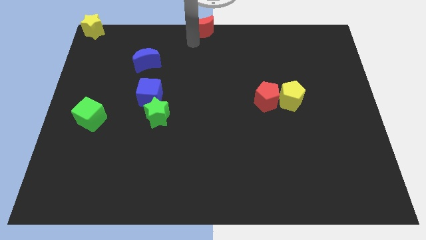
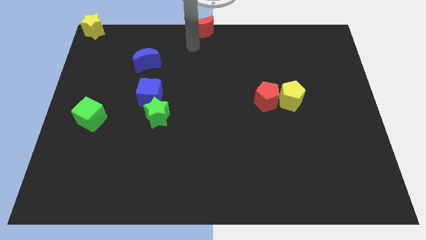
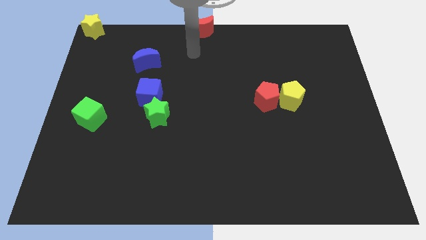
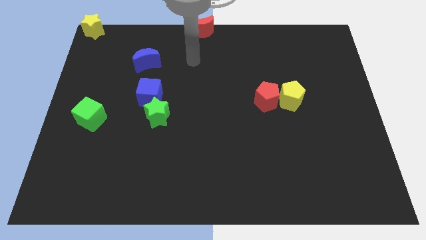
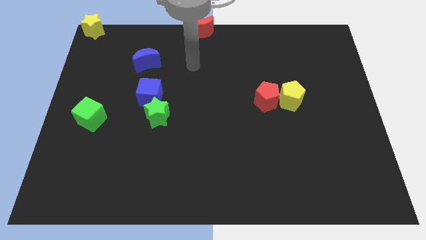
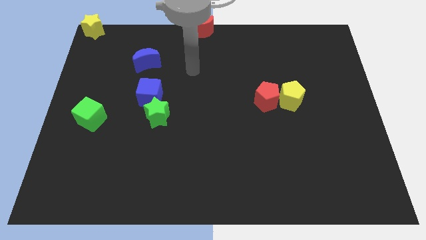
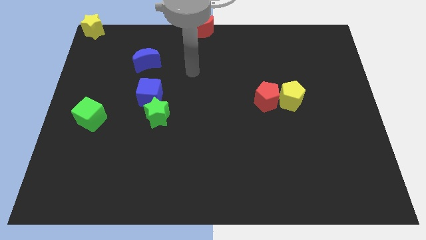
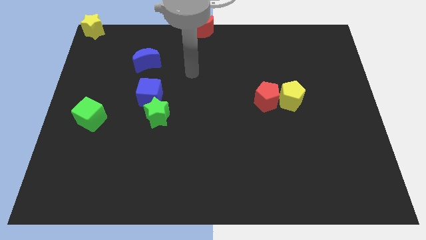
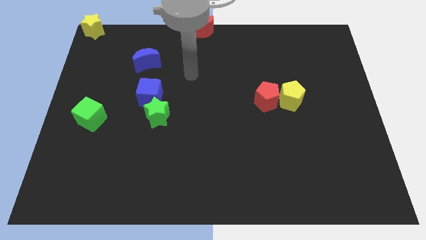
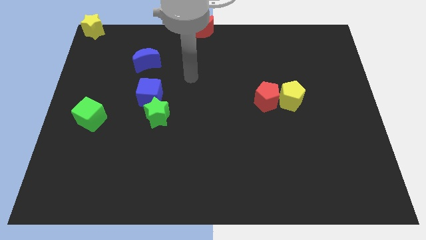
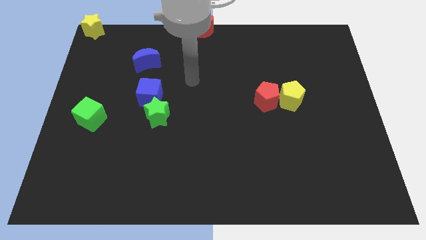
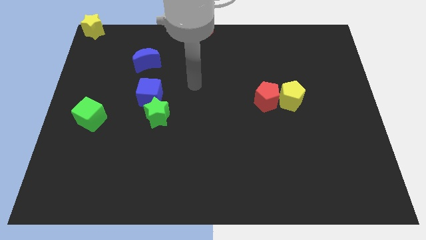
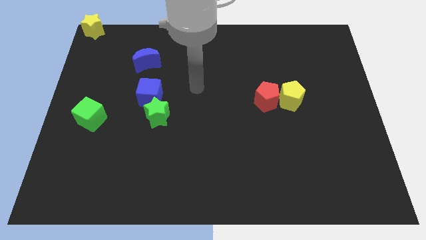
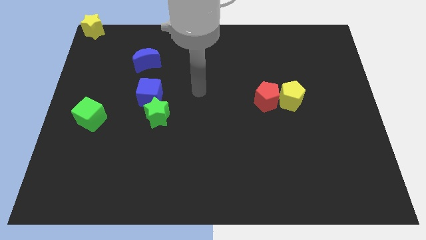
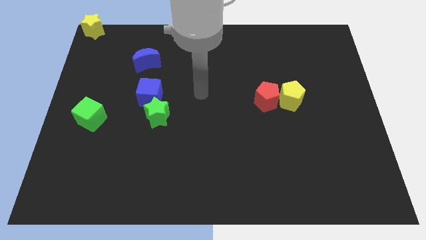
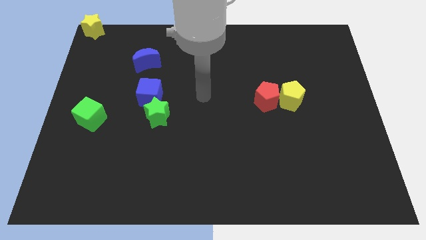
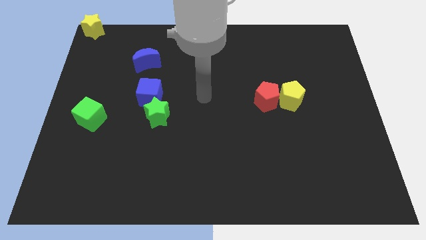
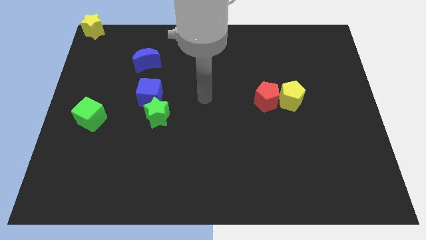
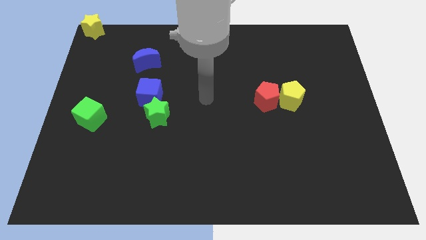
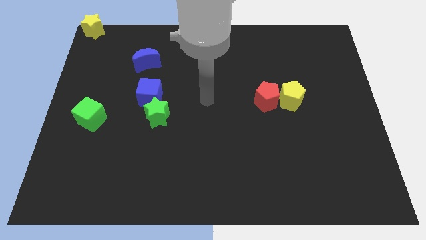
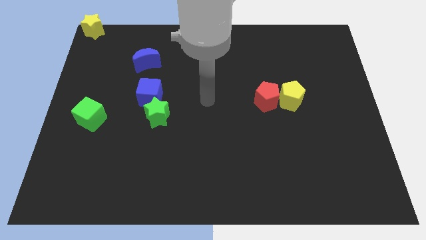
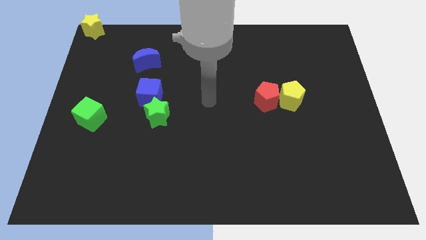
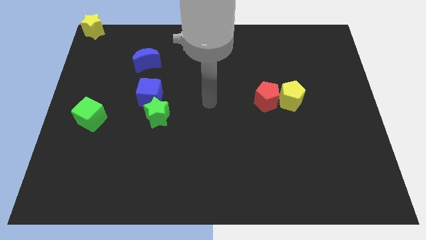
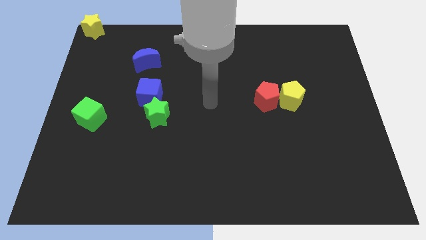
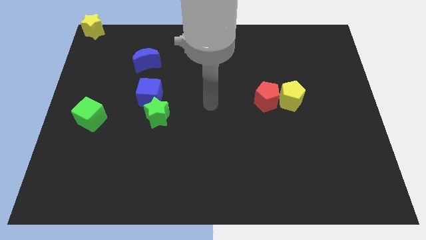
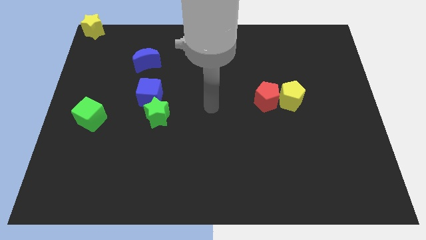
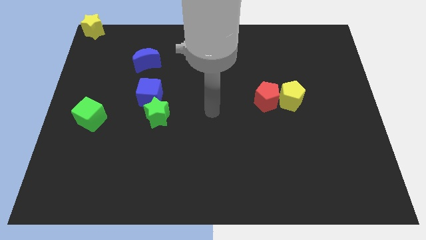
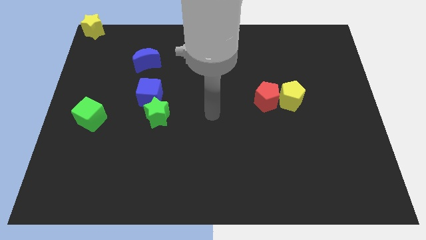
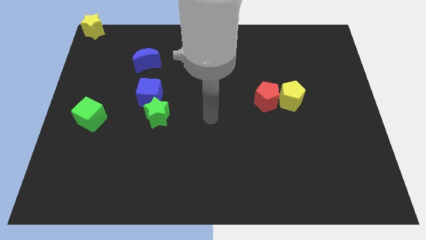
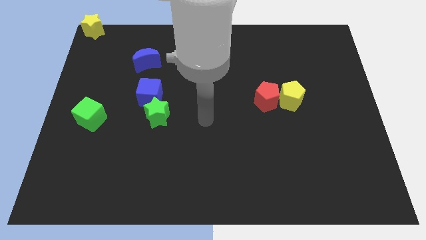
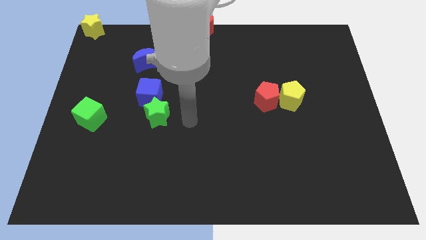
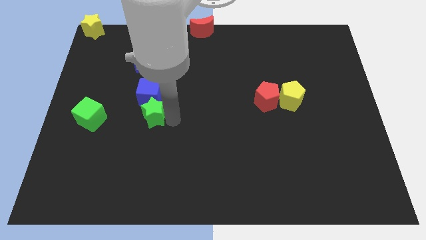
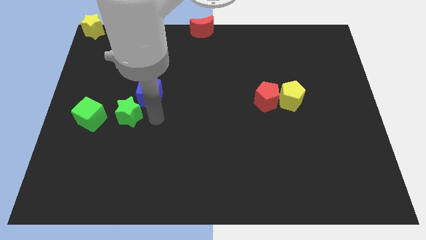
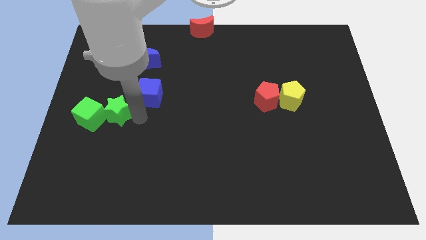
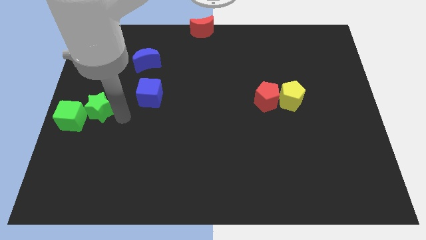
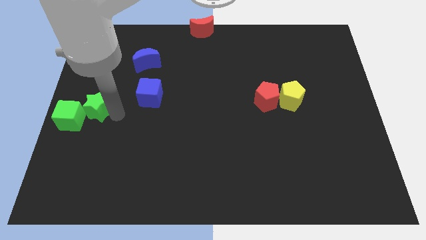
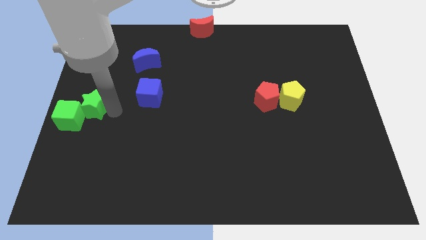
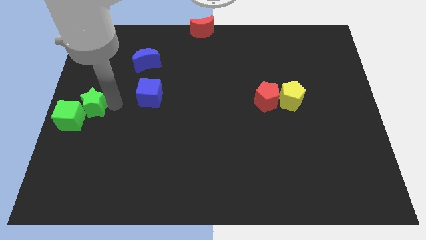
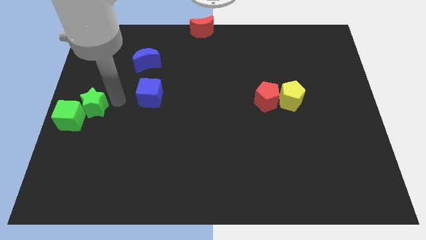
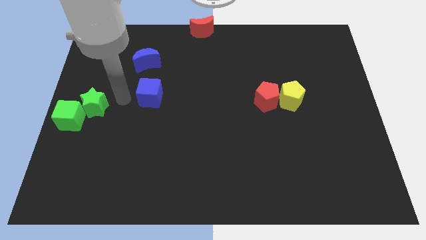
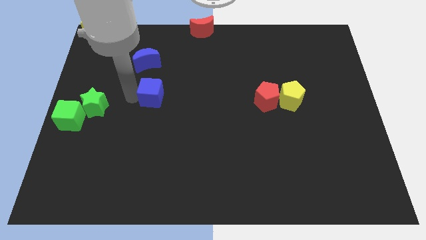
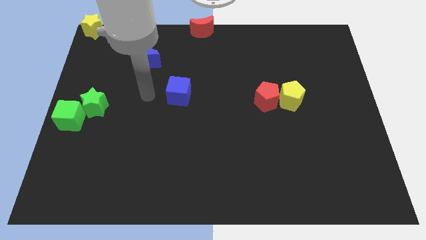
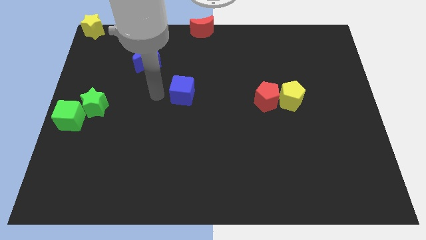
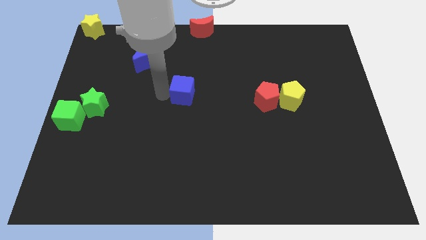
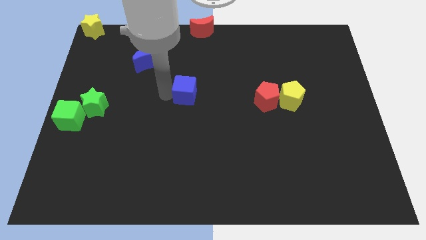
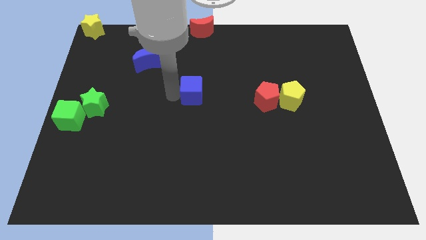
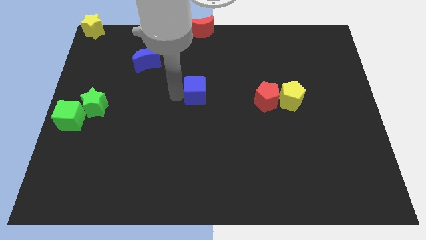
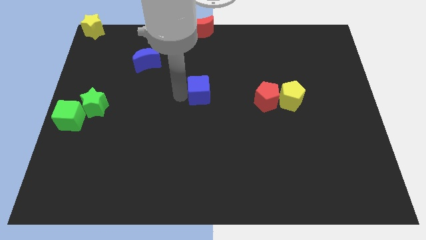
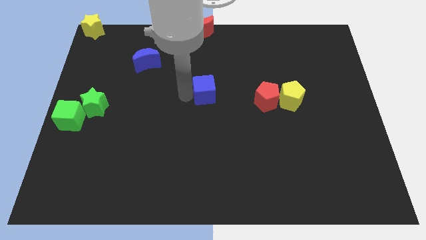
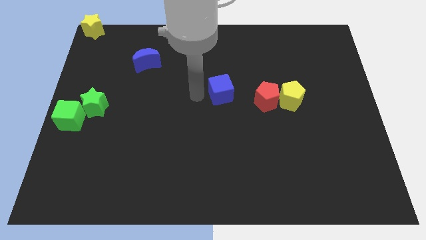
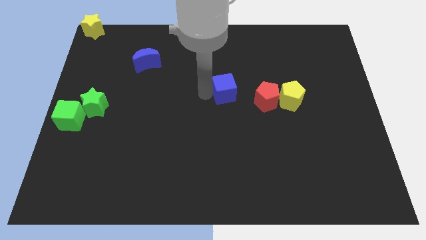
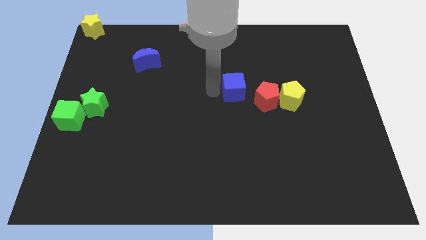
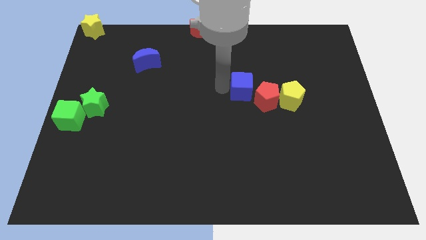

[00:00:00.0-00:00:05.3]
push the green star into the green cube

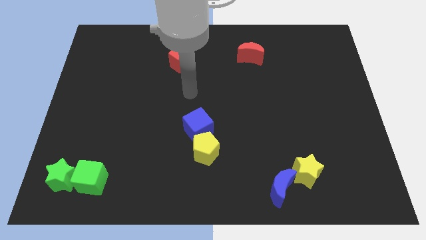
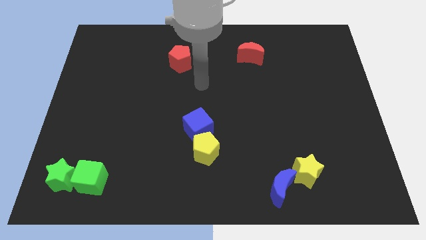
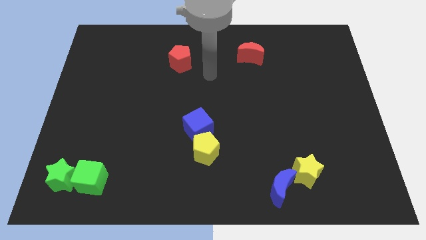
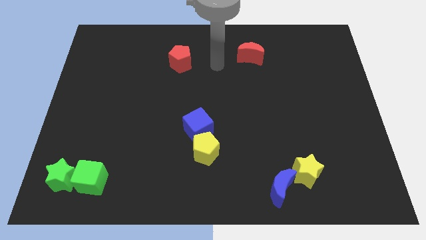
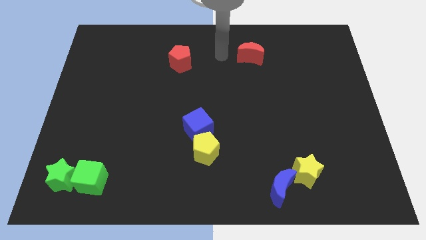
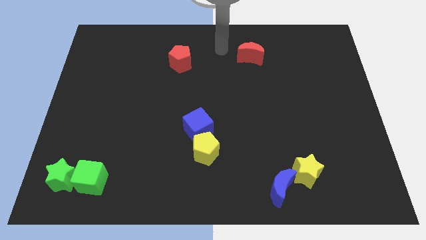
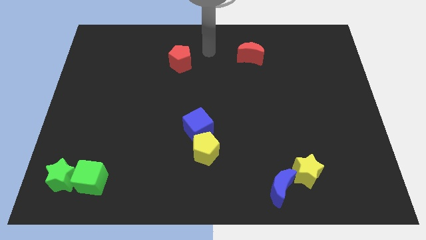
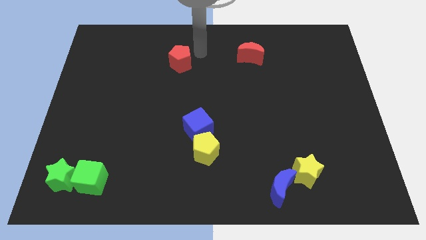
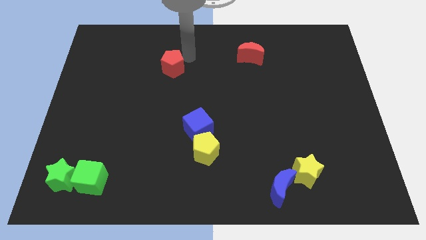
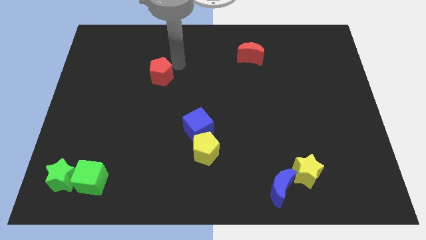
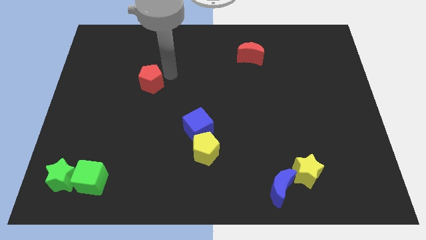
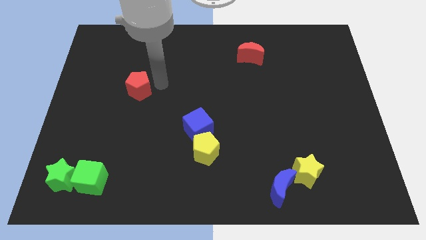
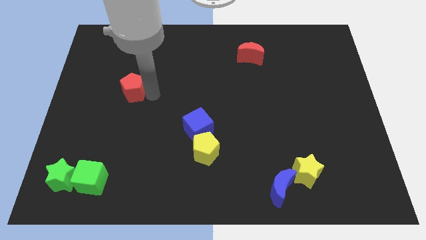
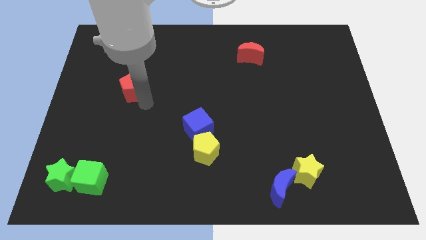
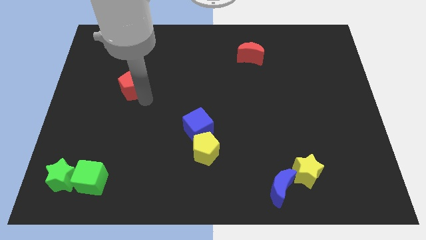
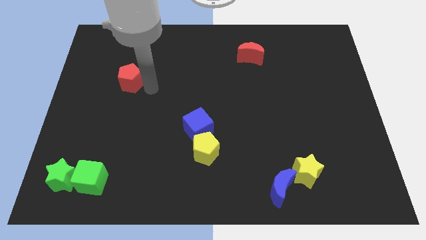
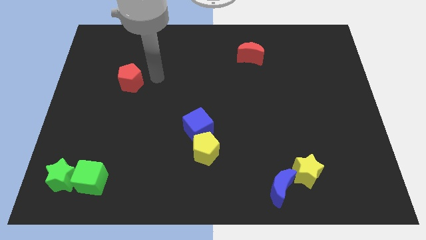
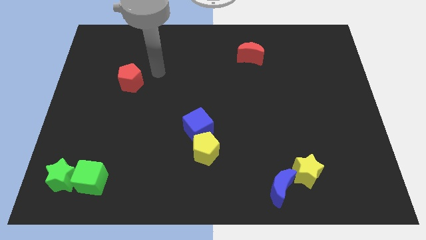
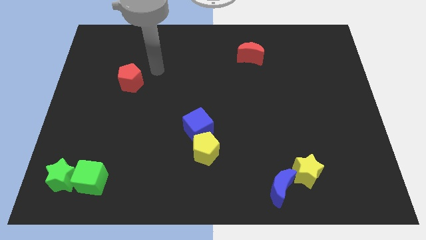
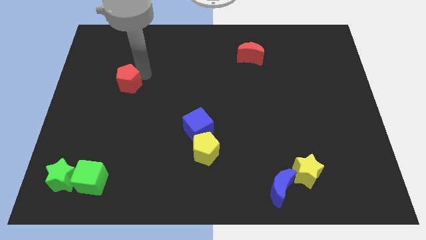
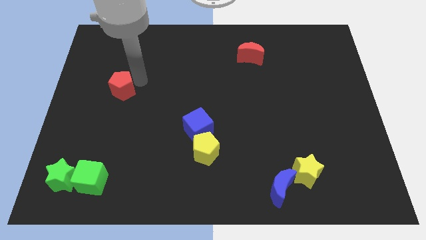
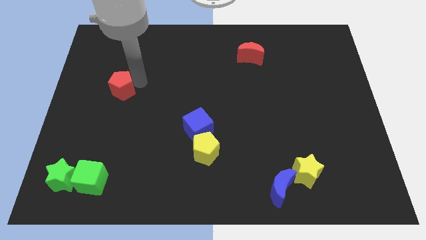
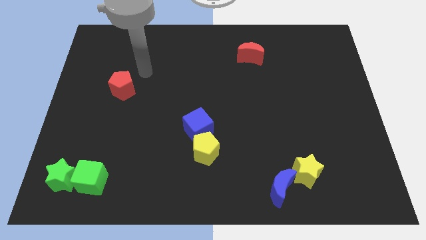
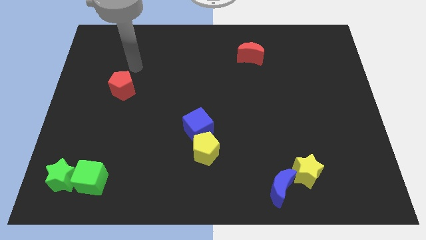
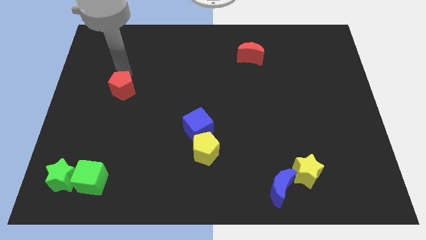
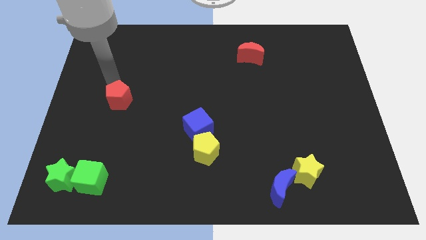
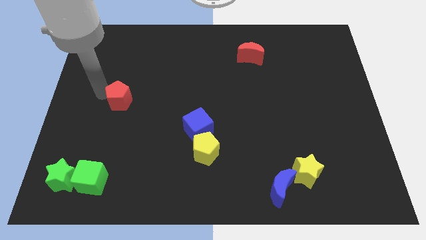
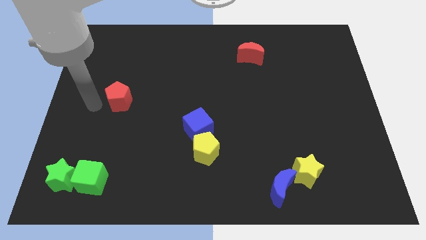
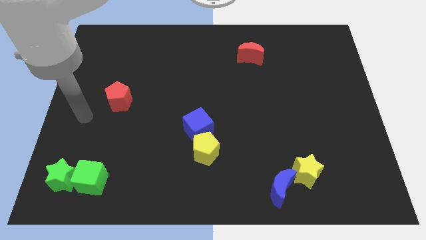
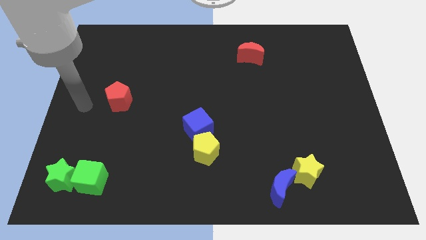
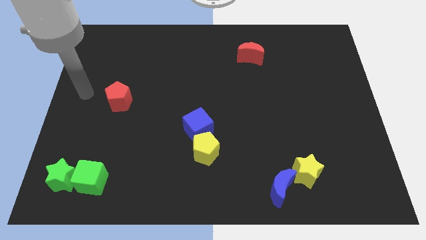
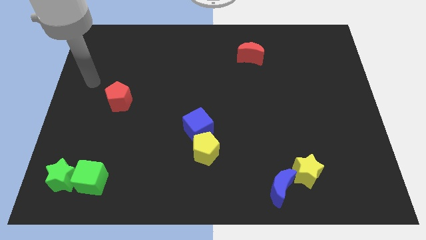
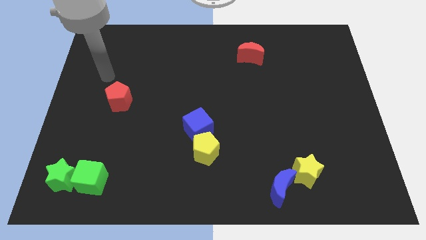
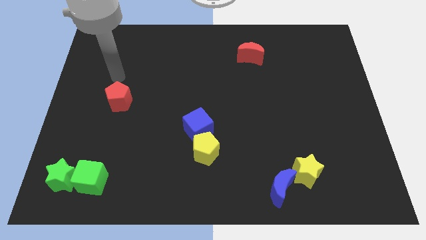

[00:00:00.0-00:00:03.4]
move the red pentagon towards the left center of the board

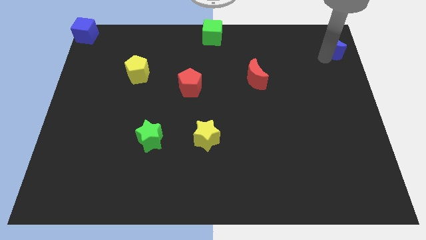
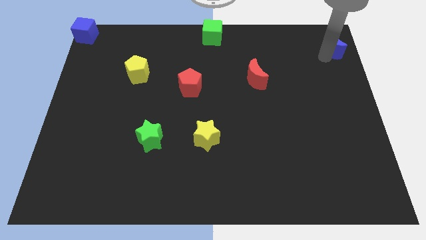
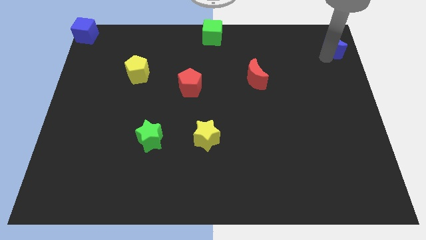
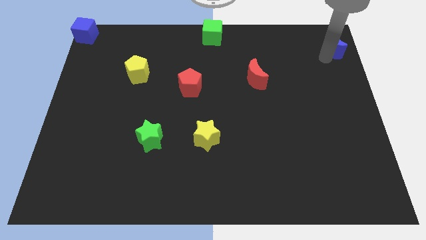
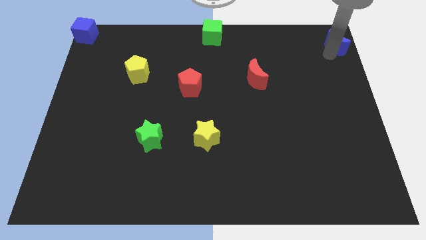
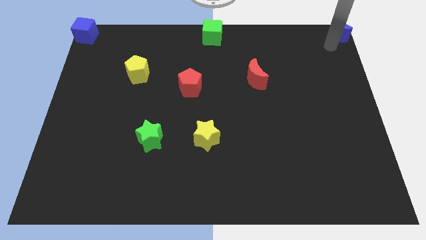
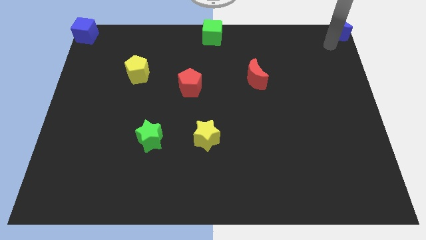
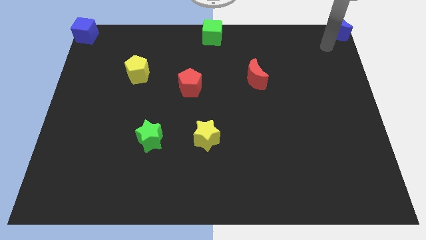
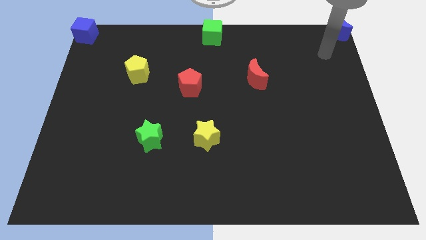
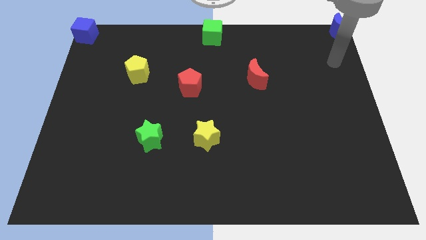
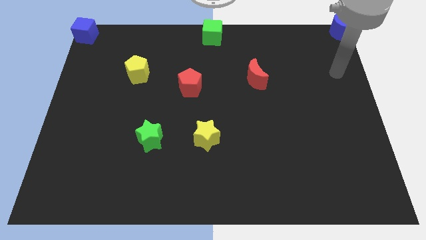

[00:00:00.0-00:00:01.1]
push the blue crescent to the top right corner of the board
